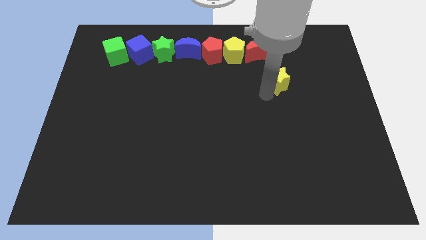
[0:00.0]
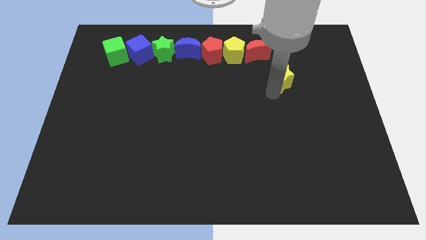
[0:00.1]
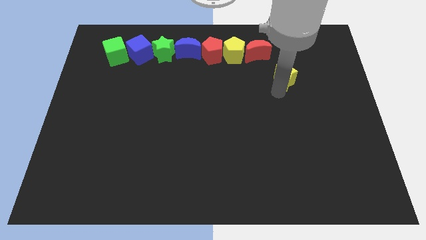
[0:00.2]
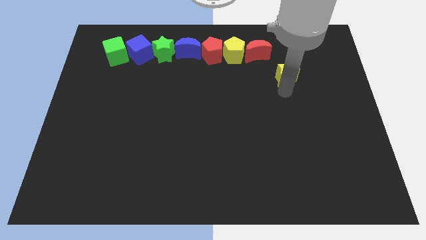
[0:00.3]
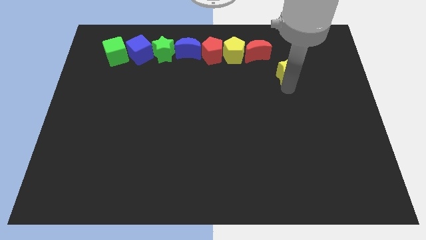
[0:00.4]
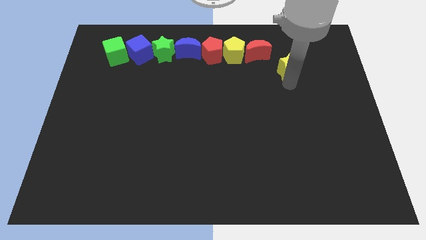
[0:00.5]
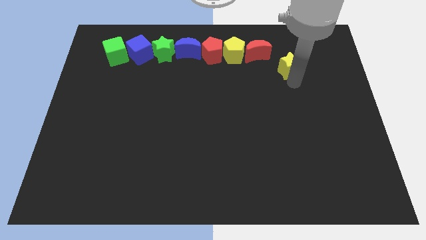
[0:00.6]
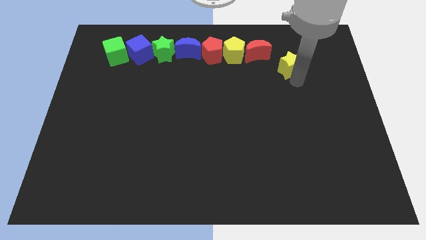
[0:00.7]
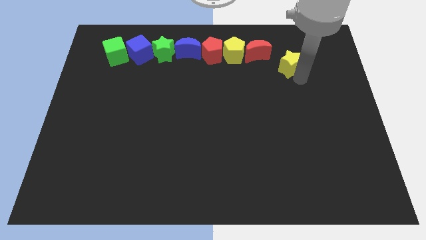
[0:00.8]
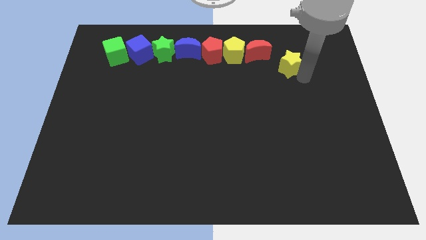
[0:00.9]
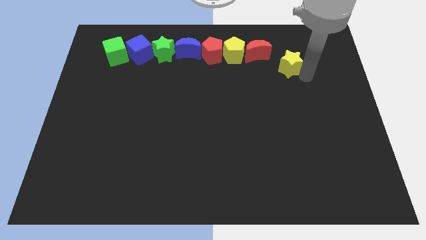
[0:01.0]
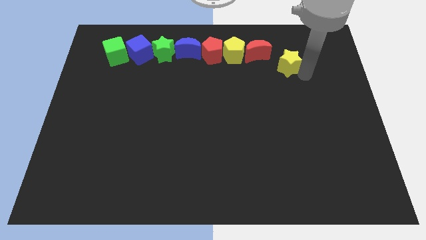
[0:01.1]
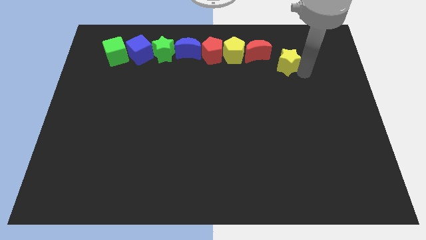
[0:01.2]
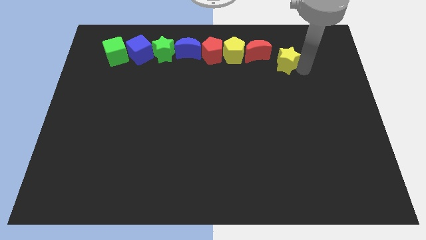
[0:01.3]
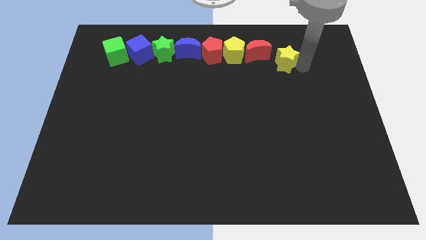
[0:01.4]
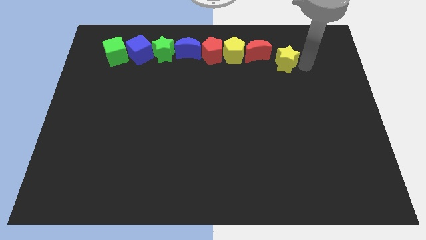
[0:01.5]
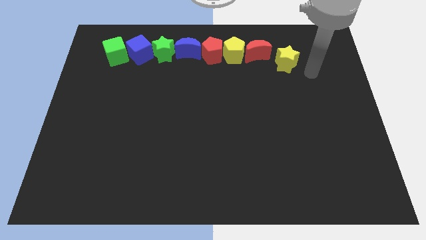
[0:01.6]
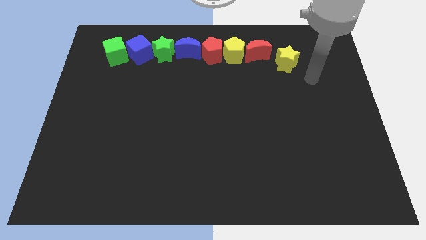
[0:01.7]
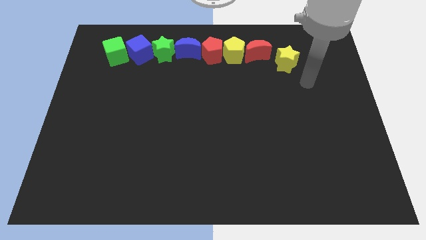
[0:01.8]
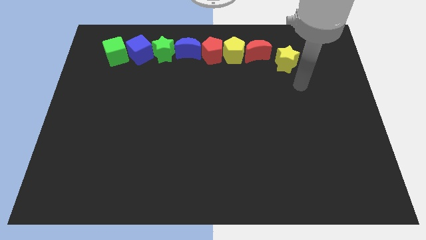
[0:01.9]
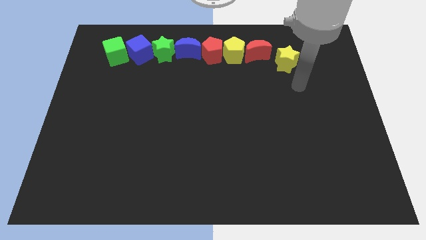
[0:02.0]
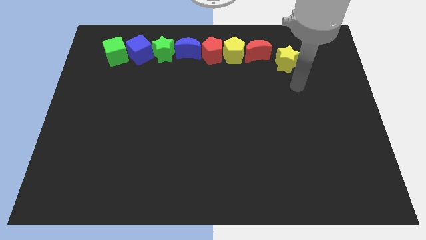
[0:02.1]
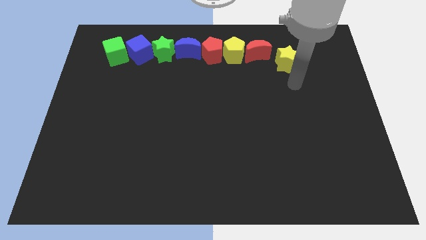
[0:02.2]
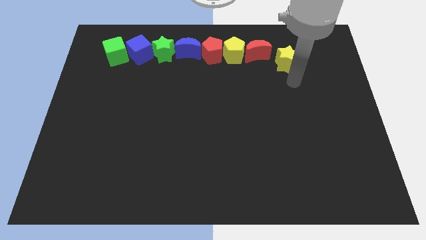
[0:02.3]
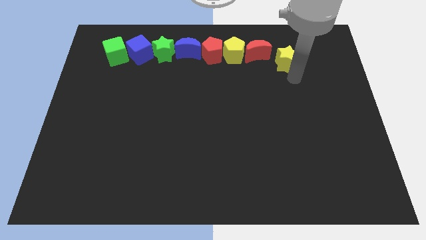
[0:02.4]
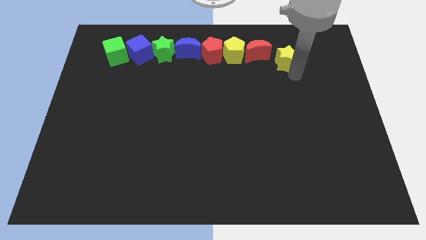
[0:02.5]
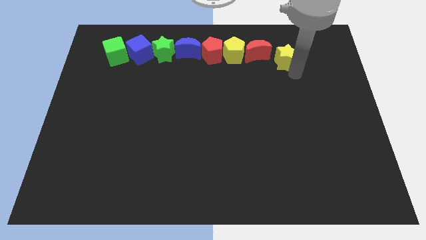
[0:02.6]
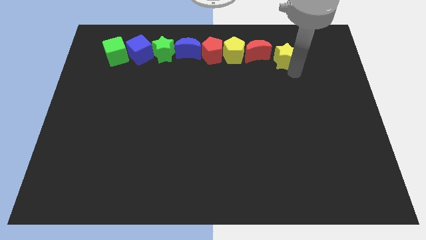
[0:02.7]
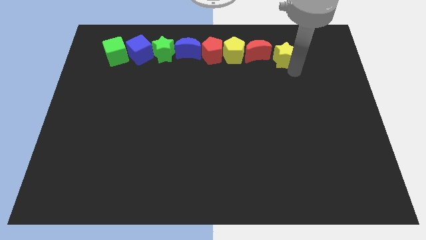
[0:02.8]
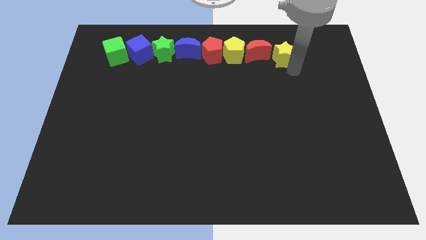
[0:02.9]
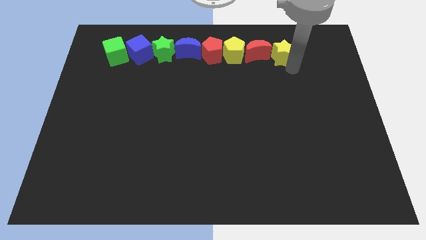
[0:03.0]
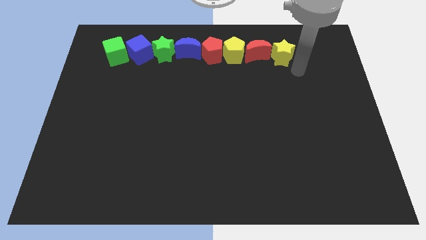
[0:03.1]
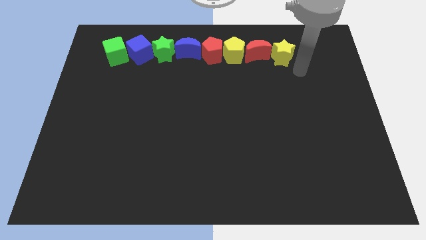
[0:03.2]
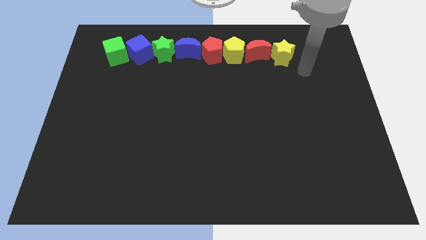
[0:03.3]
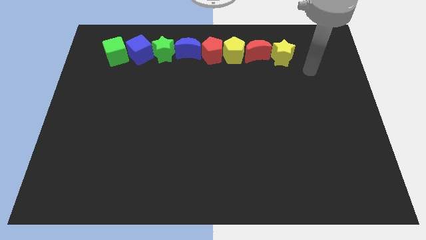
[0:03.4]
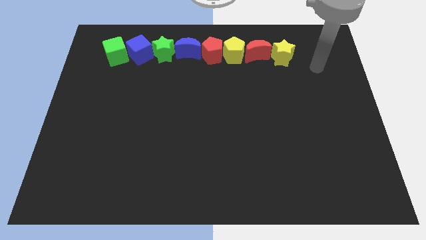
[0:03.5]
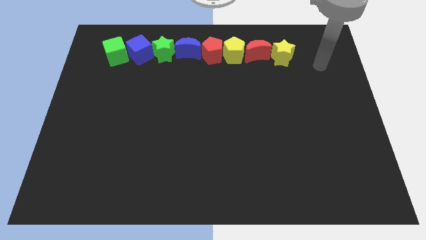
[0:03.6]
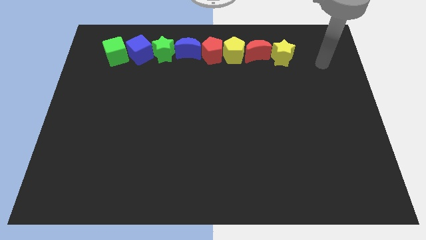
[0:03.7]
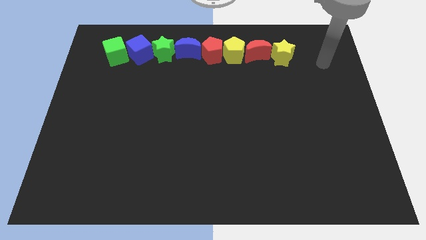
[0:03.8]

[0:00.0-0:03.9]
place yellow star to the right of red moon

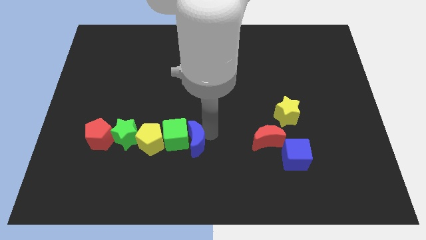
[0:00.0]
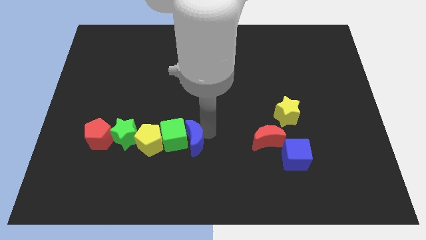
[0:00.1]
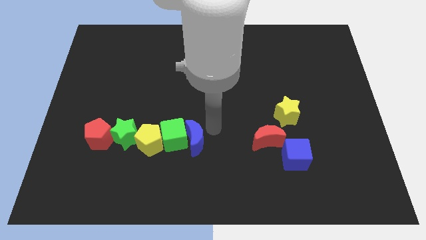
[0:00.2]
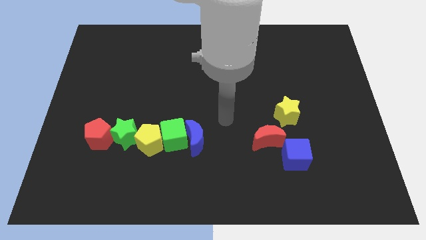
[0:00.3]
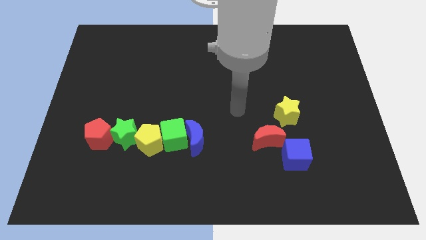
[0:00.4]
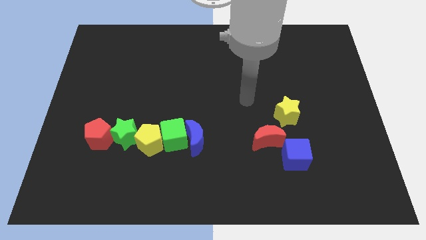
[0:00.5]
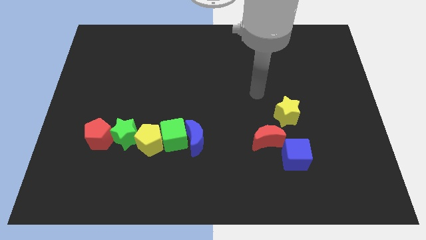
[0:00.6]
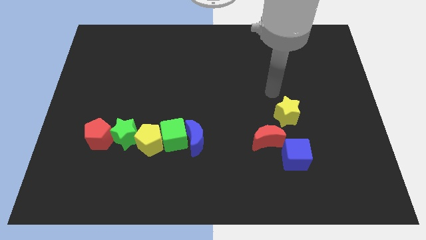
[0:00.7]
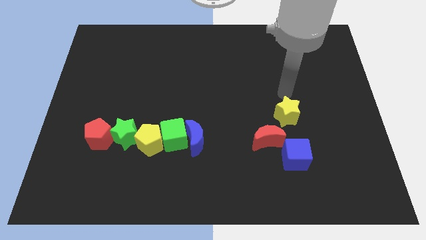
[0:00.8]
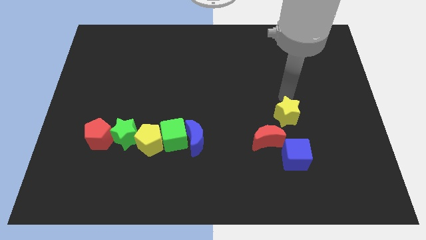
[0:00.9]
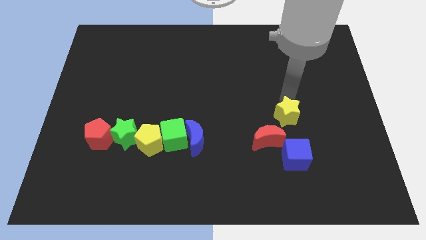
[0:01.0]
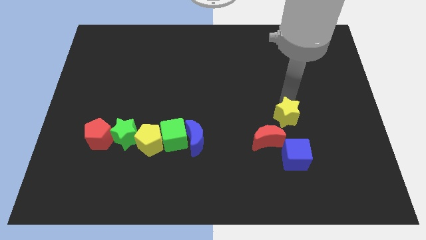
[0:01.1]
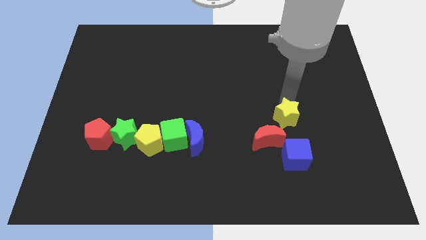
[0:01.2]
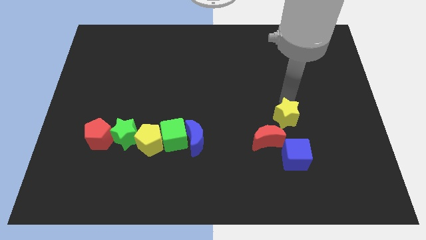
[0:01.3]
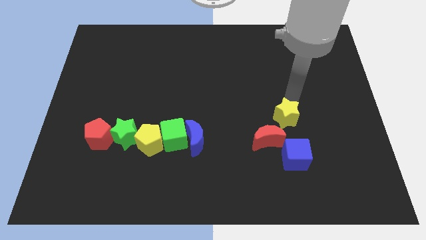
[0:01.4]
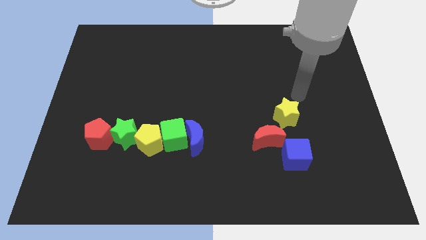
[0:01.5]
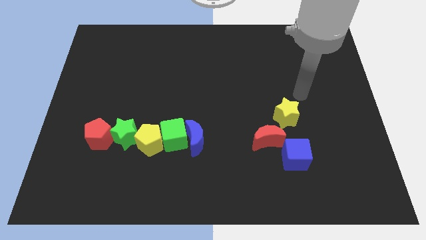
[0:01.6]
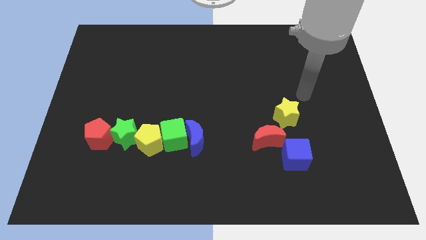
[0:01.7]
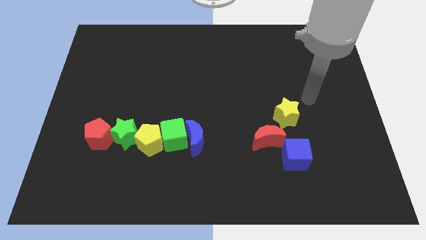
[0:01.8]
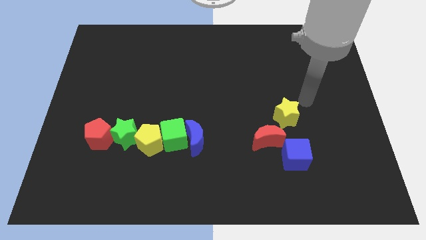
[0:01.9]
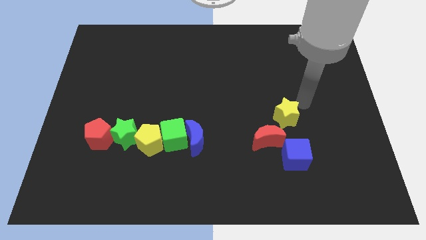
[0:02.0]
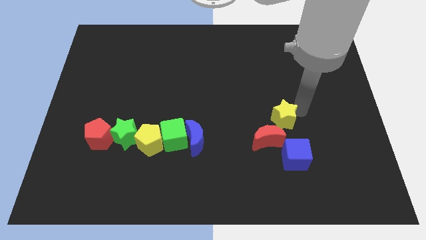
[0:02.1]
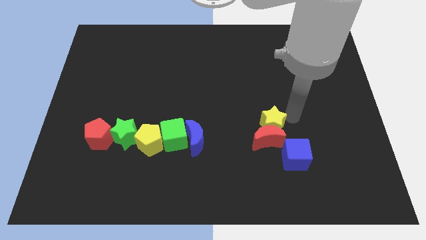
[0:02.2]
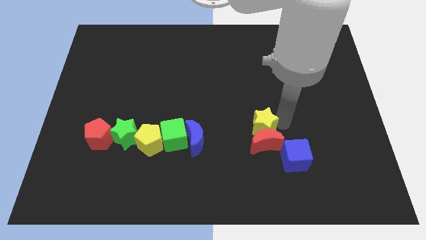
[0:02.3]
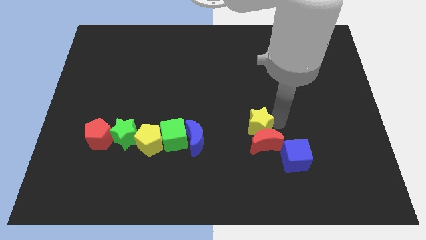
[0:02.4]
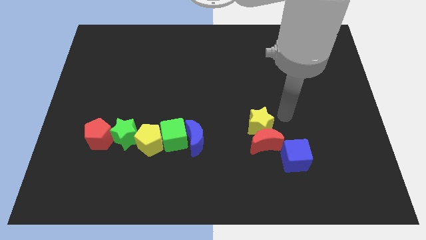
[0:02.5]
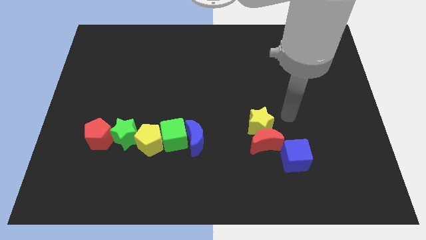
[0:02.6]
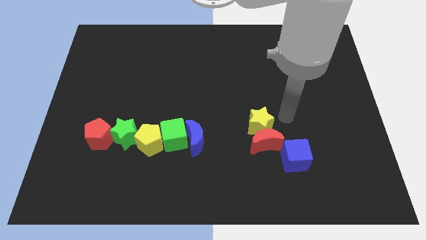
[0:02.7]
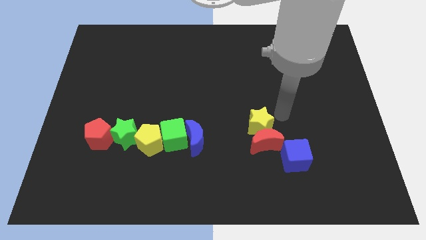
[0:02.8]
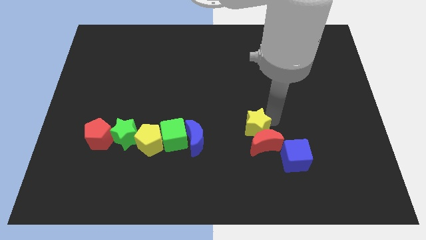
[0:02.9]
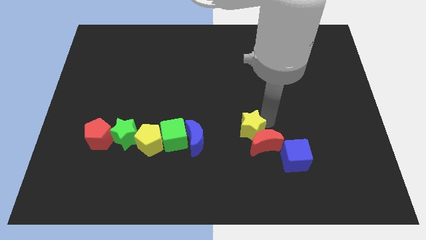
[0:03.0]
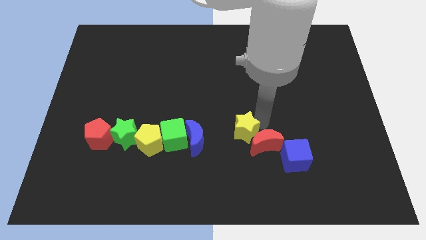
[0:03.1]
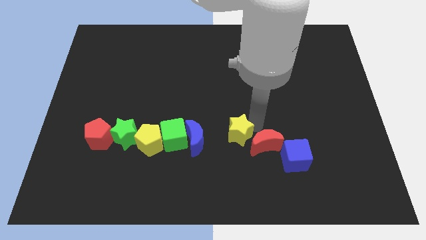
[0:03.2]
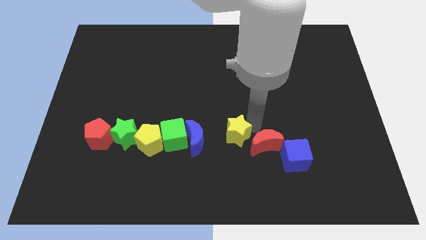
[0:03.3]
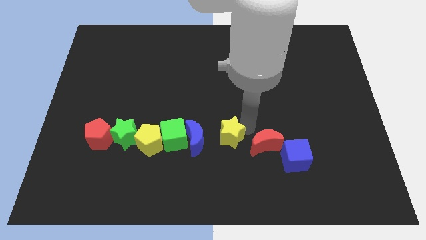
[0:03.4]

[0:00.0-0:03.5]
put the yellow star parallel right to the blue moon

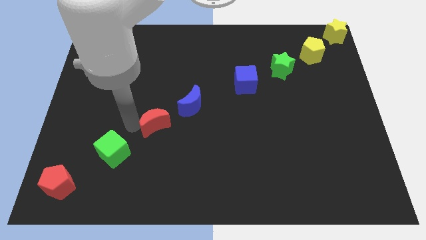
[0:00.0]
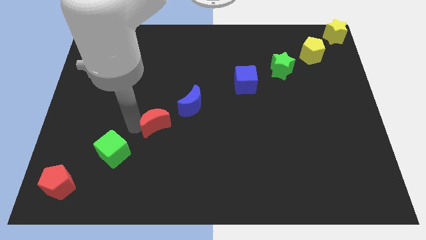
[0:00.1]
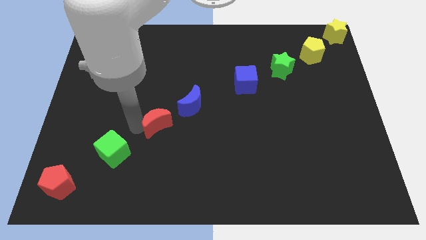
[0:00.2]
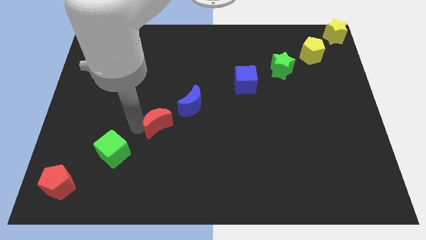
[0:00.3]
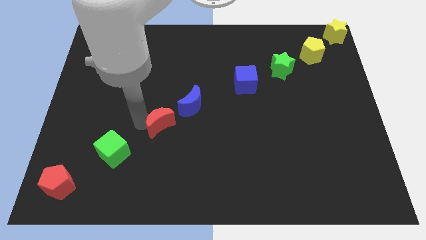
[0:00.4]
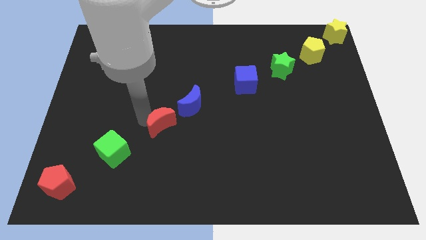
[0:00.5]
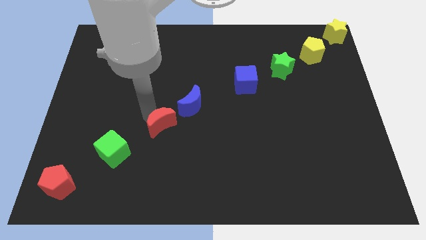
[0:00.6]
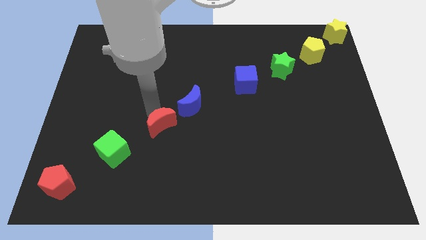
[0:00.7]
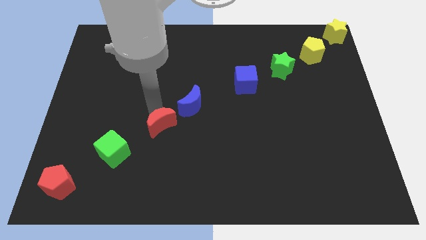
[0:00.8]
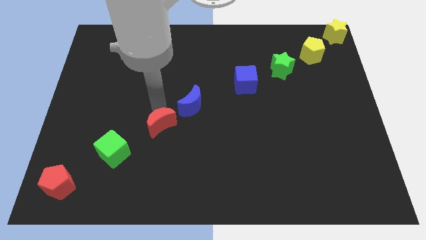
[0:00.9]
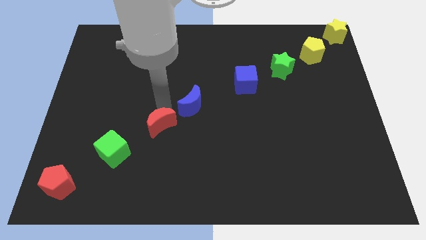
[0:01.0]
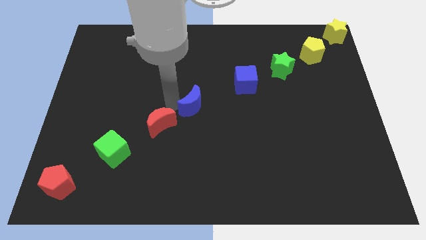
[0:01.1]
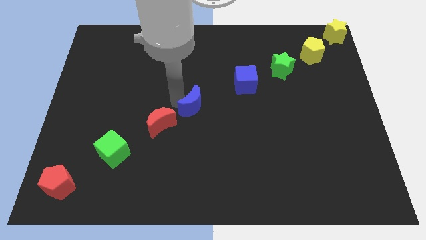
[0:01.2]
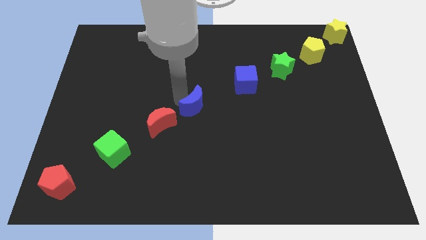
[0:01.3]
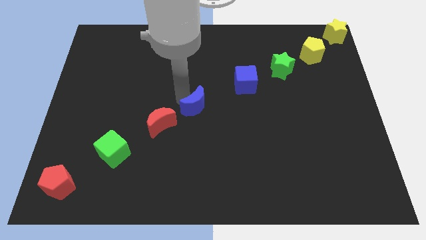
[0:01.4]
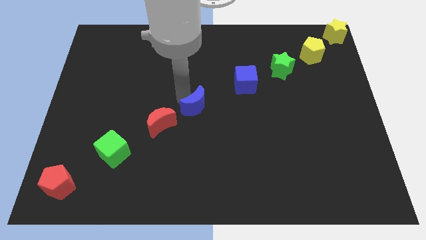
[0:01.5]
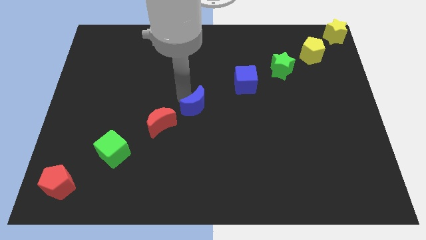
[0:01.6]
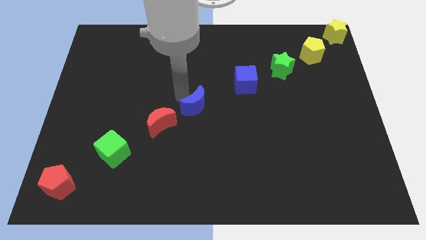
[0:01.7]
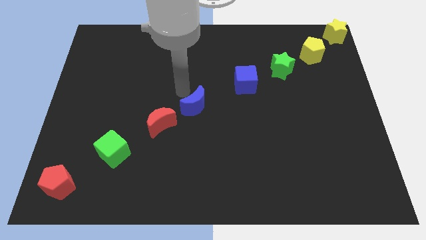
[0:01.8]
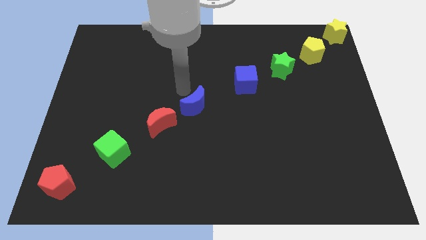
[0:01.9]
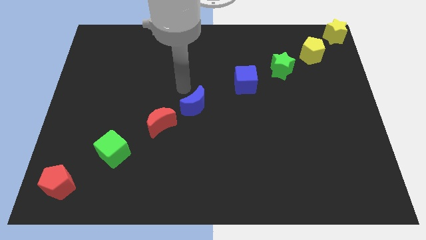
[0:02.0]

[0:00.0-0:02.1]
tap the red moon and blue moon
